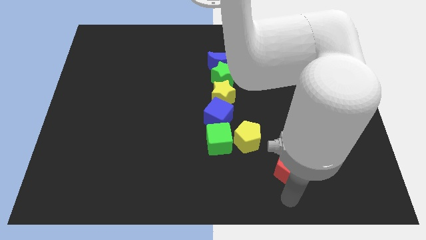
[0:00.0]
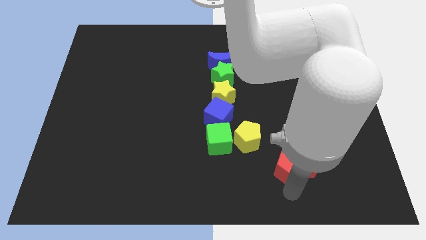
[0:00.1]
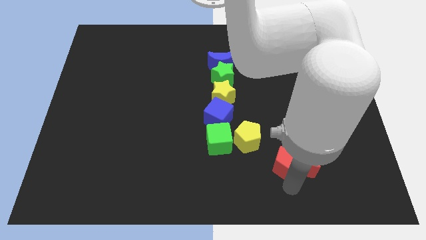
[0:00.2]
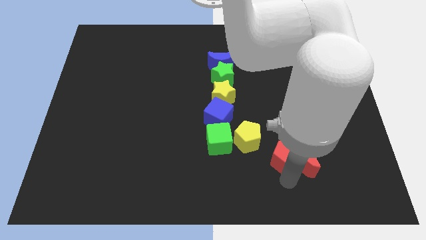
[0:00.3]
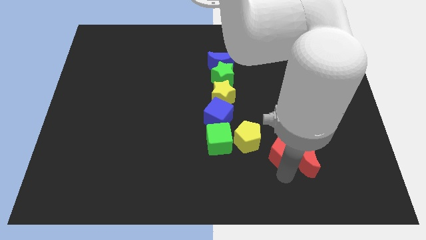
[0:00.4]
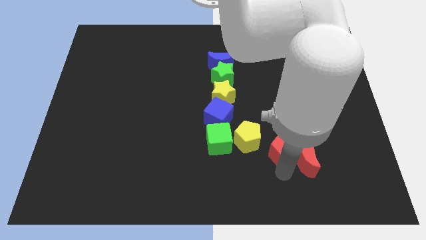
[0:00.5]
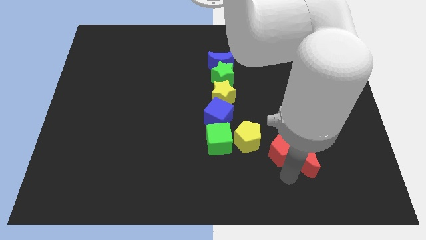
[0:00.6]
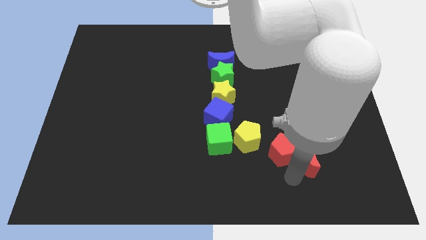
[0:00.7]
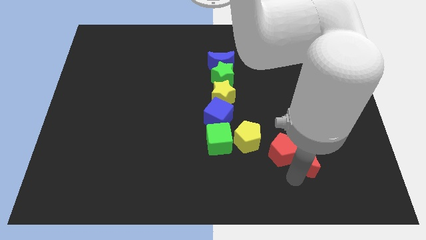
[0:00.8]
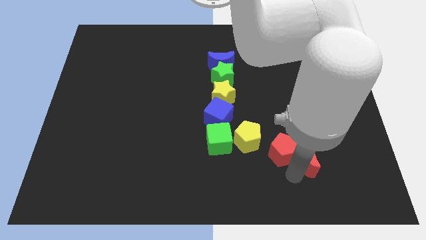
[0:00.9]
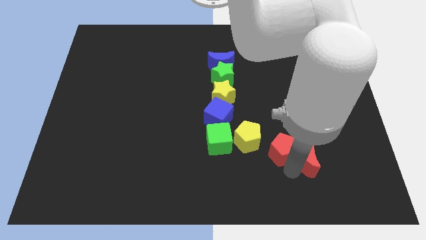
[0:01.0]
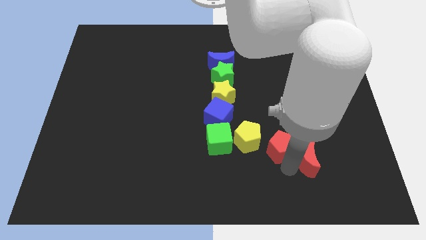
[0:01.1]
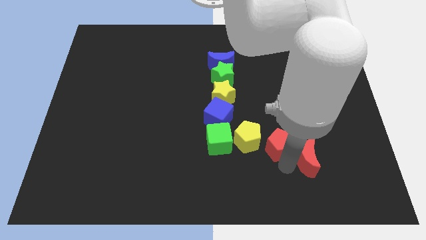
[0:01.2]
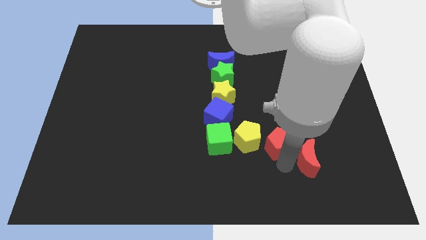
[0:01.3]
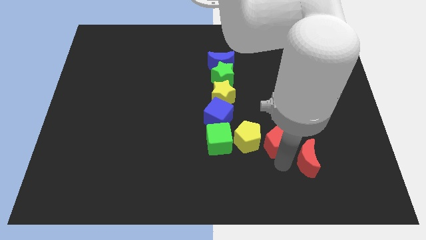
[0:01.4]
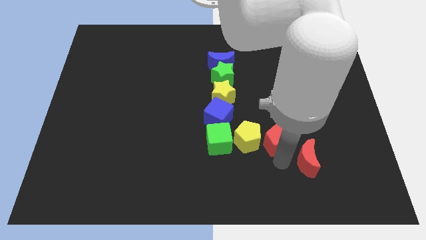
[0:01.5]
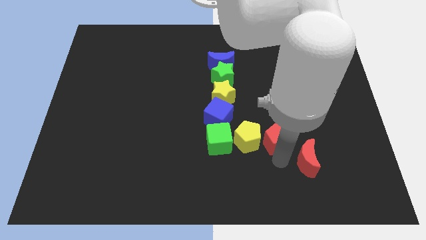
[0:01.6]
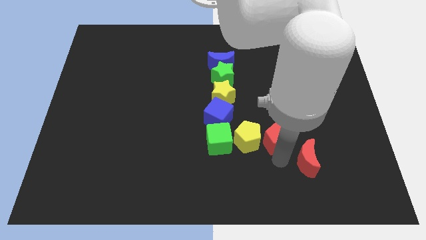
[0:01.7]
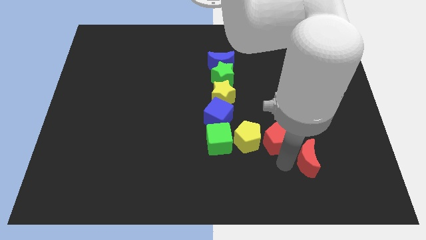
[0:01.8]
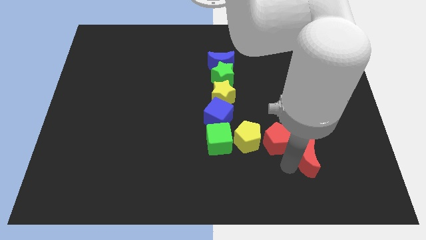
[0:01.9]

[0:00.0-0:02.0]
push the red pentagon to the right of the yellow pentagon

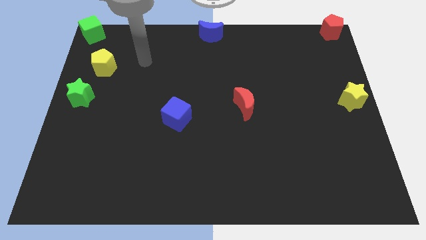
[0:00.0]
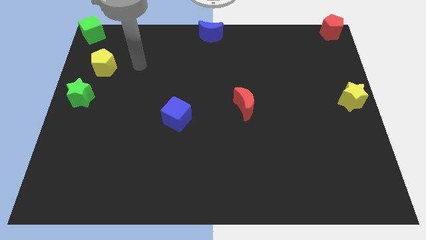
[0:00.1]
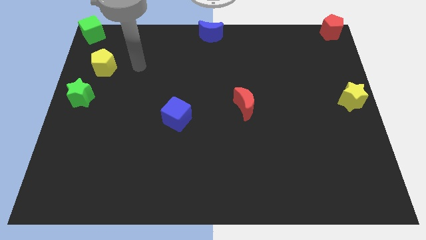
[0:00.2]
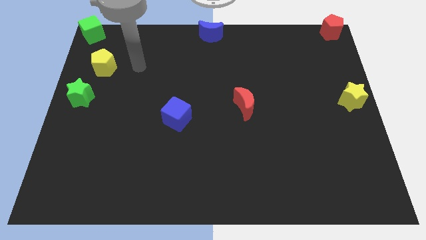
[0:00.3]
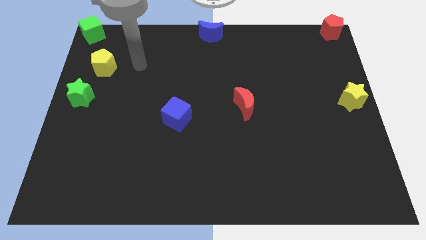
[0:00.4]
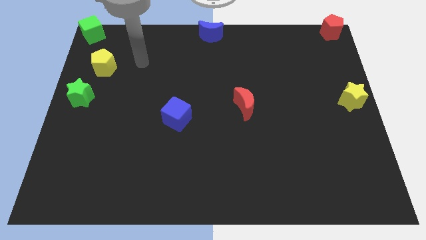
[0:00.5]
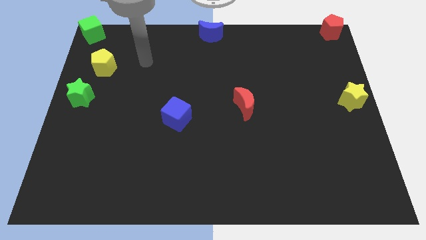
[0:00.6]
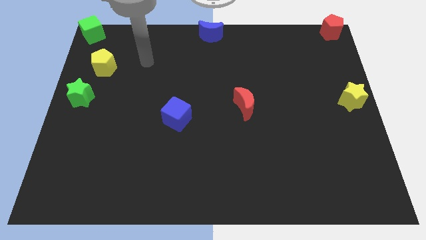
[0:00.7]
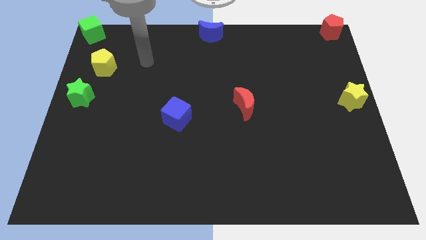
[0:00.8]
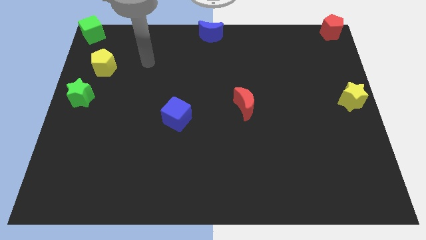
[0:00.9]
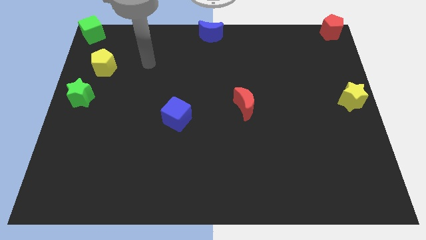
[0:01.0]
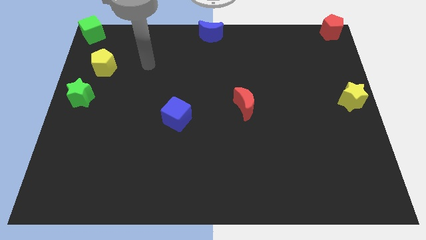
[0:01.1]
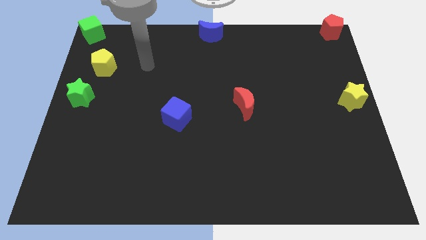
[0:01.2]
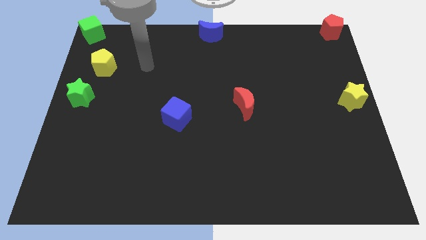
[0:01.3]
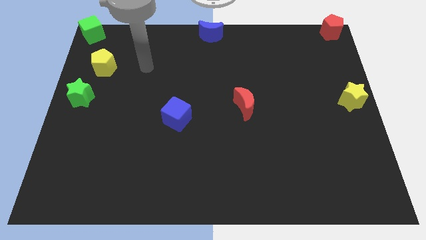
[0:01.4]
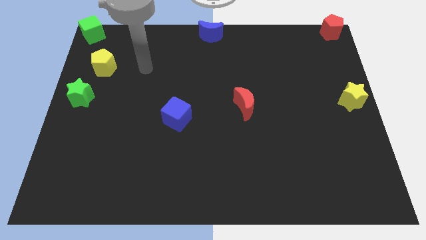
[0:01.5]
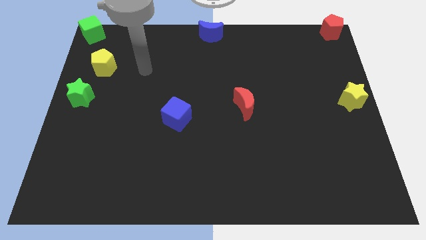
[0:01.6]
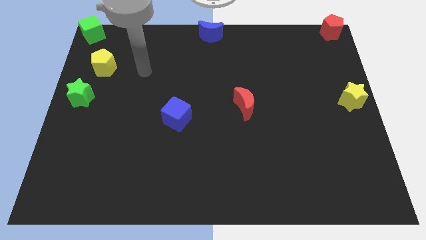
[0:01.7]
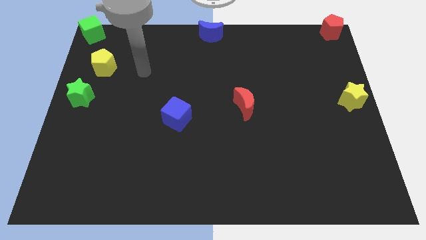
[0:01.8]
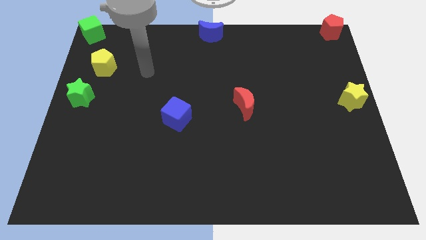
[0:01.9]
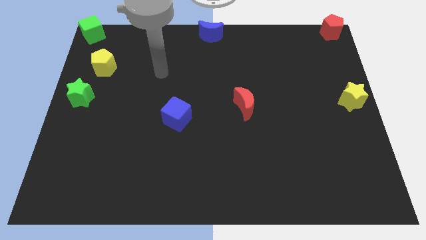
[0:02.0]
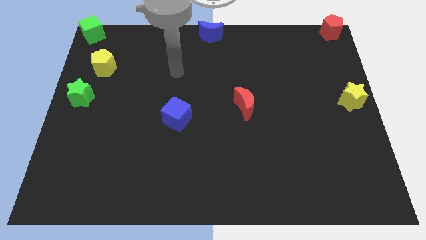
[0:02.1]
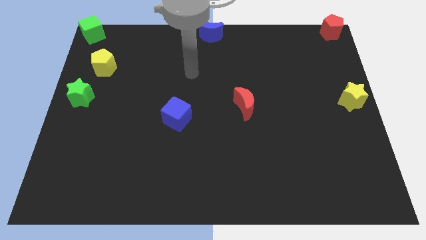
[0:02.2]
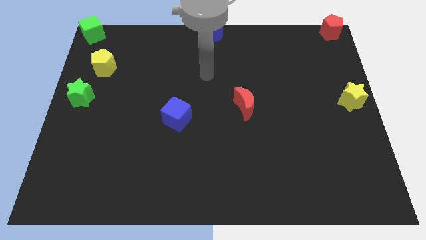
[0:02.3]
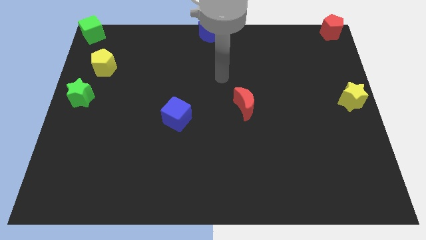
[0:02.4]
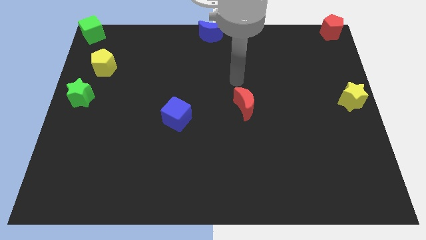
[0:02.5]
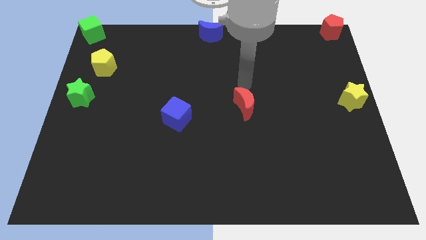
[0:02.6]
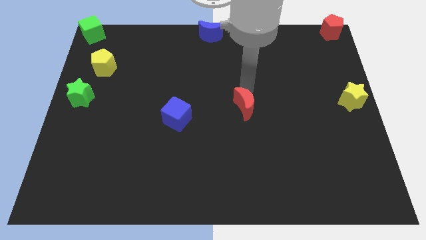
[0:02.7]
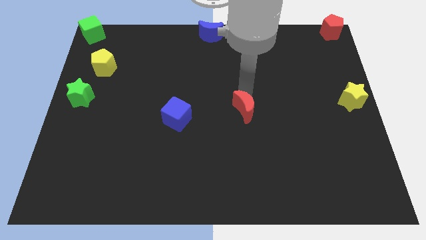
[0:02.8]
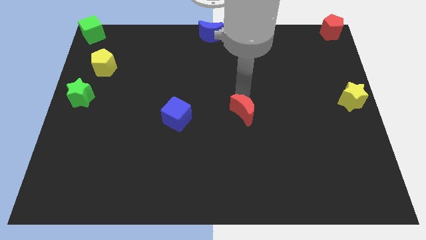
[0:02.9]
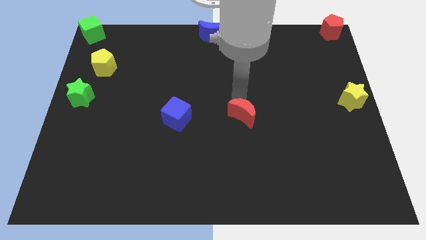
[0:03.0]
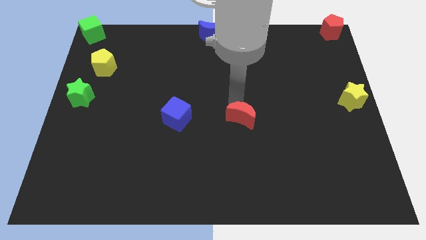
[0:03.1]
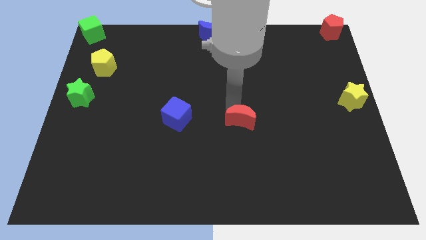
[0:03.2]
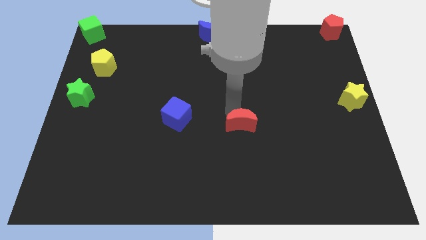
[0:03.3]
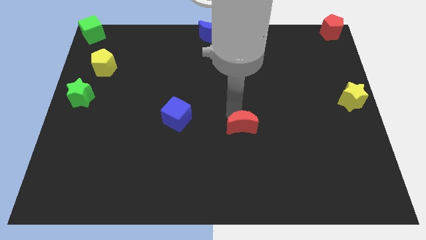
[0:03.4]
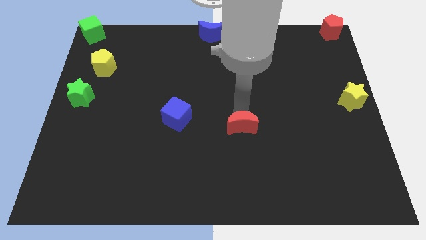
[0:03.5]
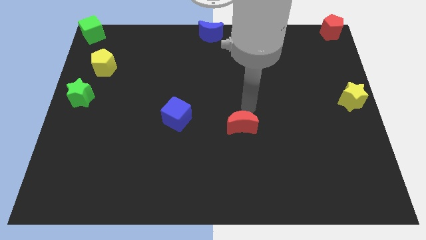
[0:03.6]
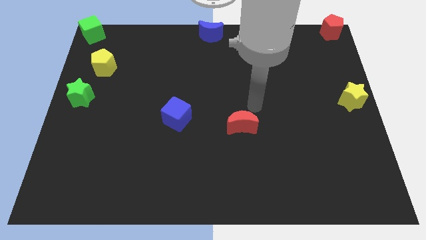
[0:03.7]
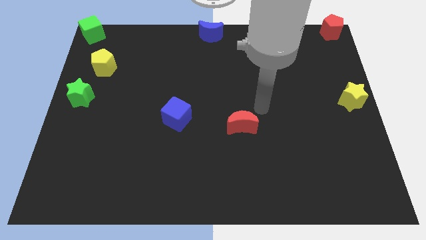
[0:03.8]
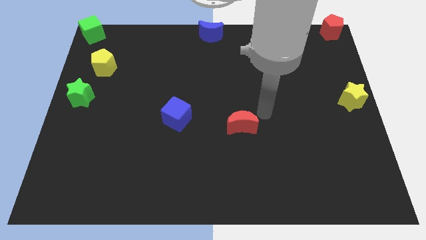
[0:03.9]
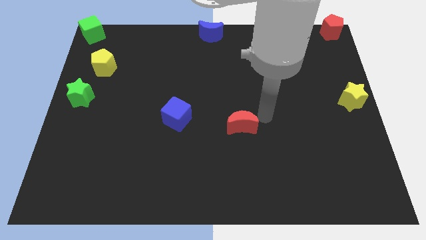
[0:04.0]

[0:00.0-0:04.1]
move your arm towards the top of the red crescent

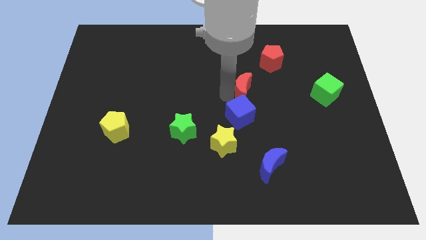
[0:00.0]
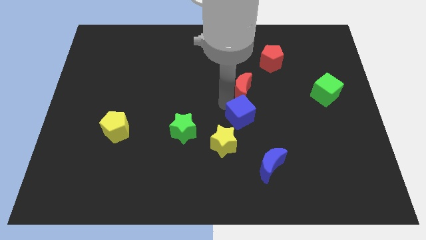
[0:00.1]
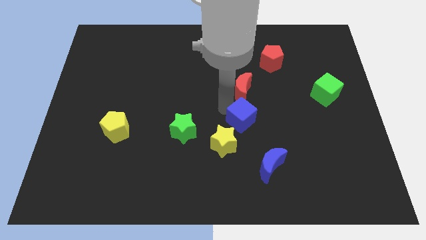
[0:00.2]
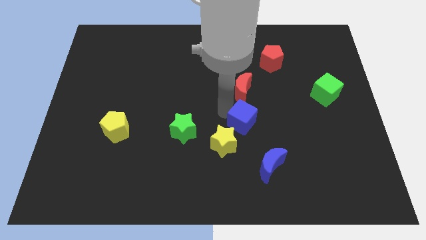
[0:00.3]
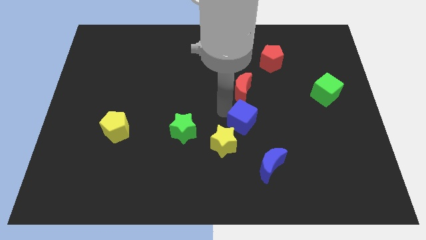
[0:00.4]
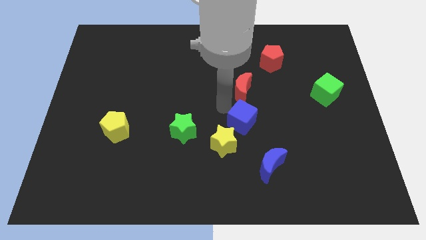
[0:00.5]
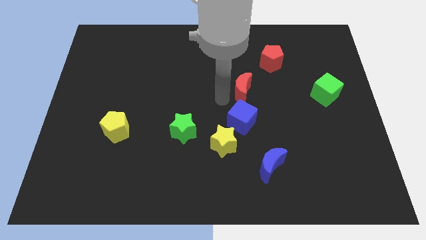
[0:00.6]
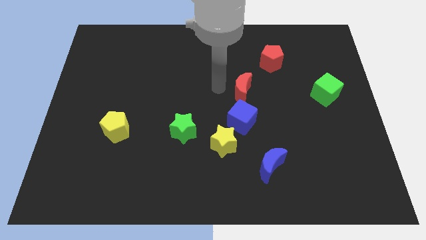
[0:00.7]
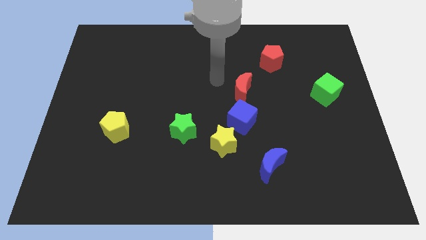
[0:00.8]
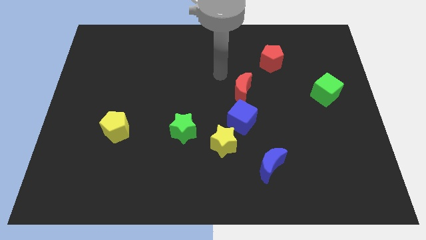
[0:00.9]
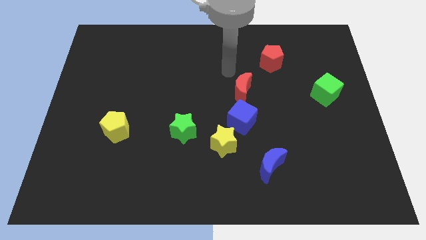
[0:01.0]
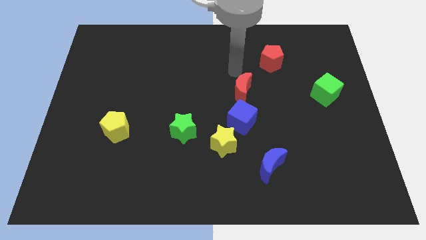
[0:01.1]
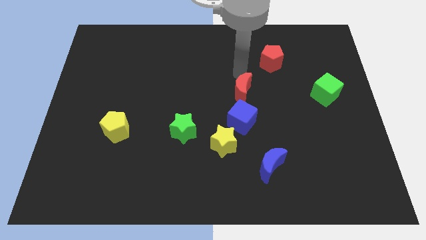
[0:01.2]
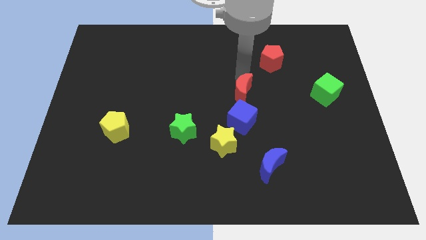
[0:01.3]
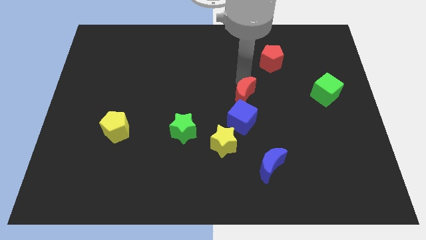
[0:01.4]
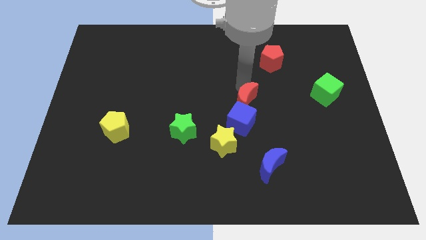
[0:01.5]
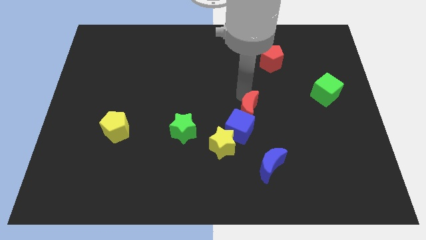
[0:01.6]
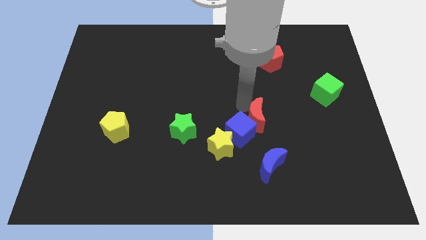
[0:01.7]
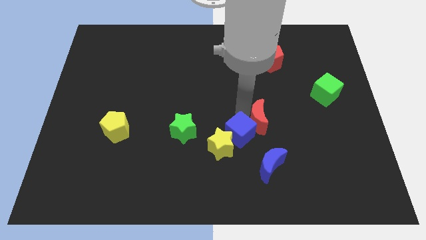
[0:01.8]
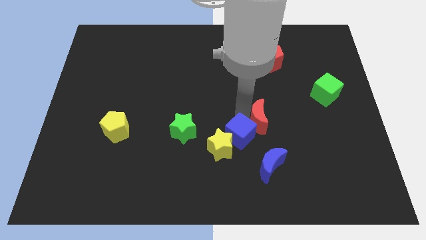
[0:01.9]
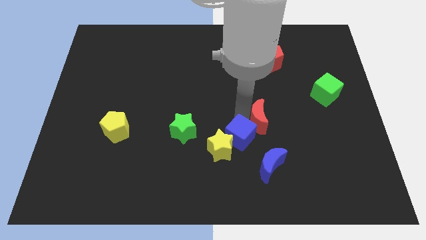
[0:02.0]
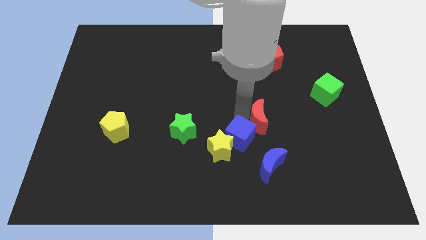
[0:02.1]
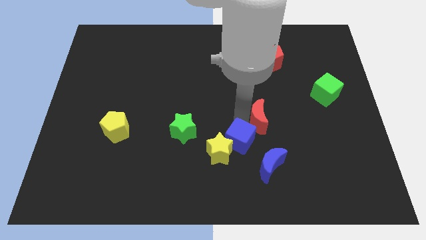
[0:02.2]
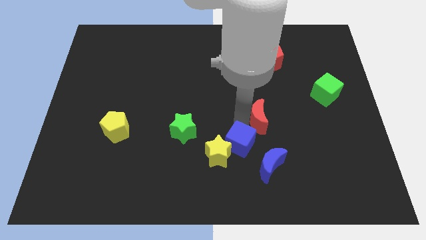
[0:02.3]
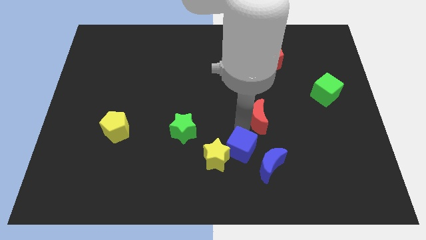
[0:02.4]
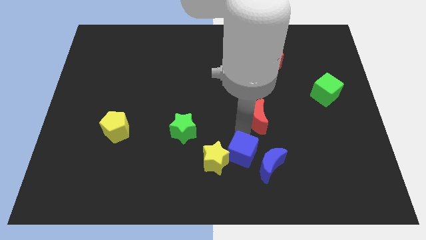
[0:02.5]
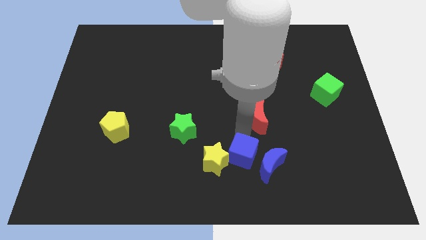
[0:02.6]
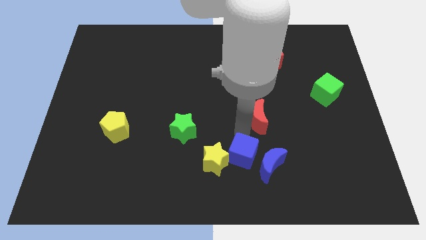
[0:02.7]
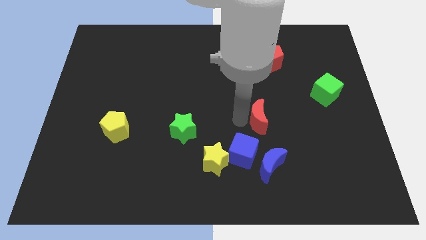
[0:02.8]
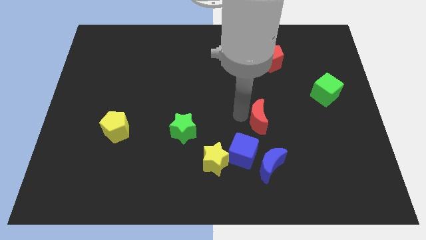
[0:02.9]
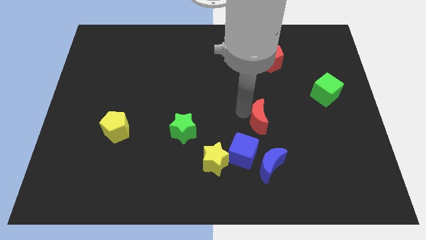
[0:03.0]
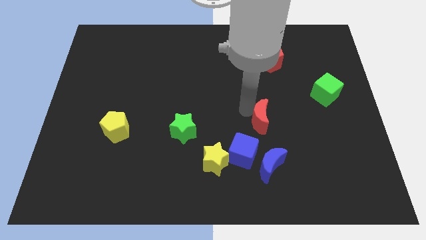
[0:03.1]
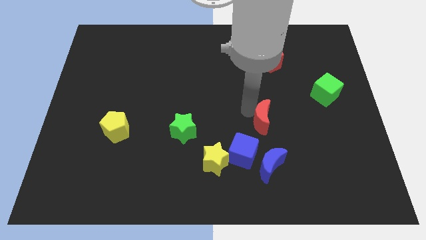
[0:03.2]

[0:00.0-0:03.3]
push blue cube into the yellow star
